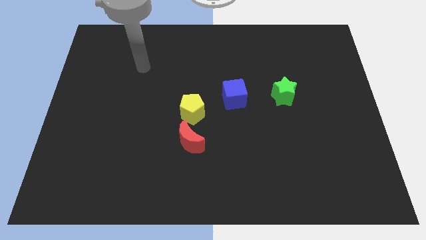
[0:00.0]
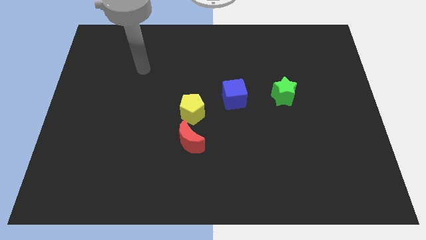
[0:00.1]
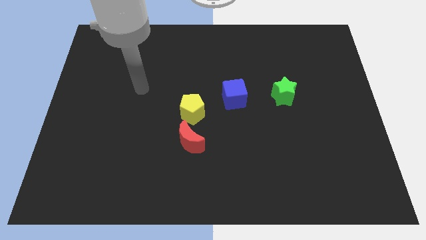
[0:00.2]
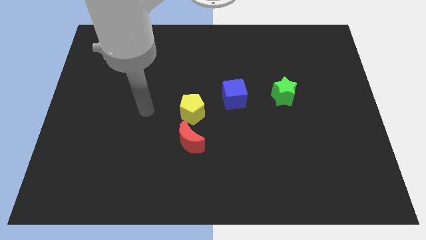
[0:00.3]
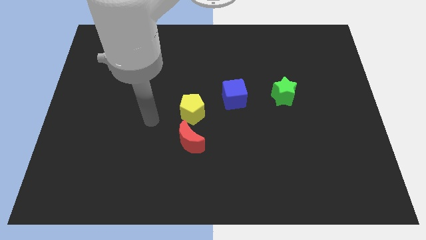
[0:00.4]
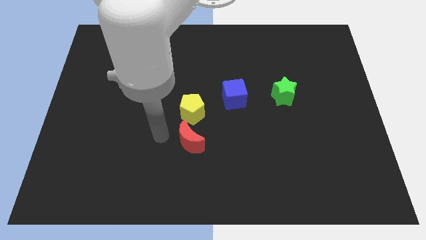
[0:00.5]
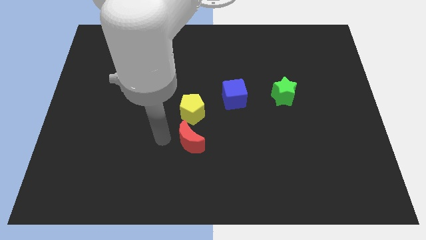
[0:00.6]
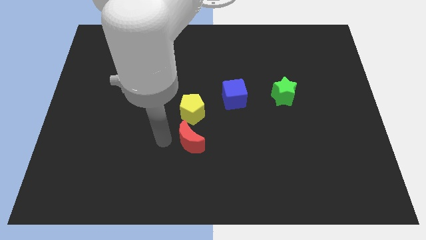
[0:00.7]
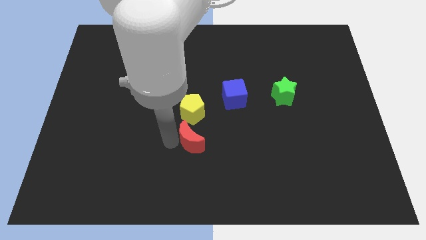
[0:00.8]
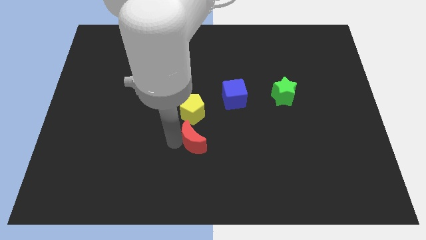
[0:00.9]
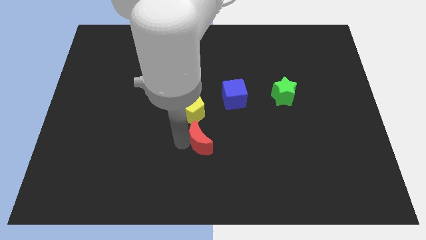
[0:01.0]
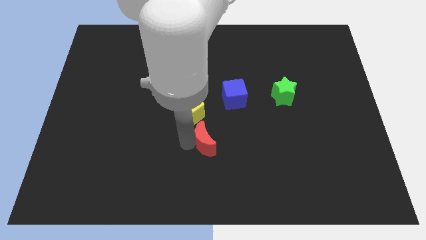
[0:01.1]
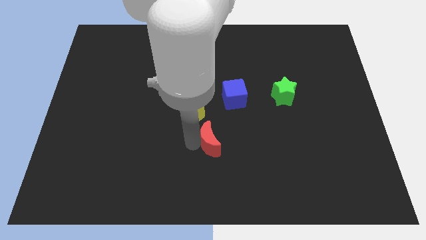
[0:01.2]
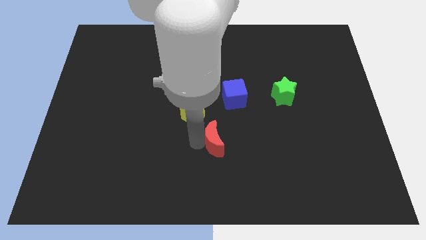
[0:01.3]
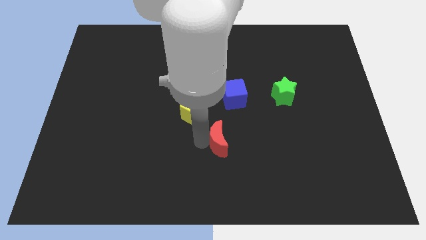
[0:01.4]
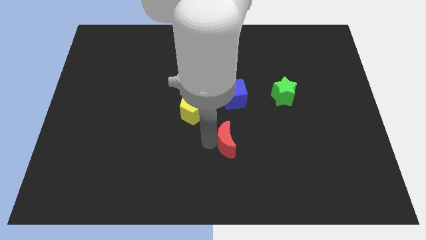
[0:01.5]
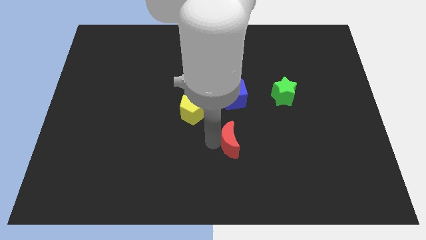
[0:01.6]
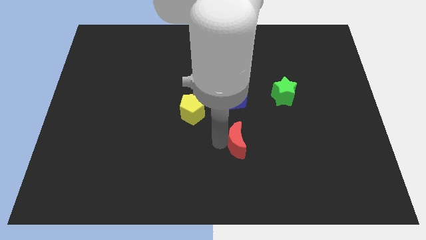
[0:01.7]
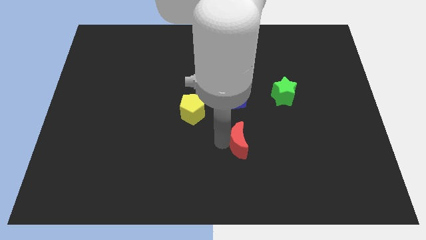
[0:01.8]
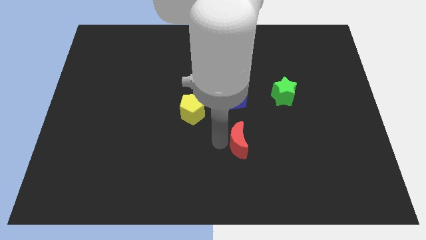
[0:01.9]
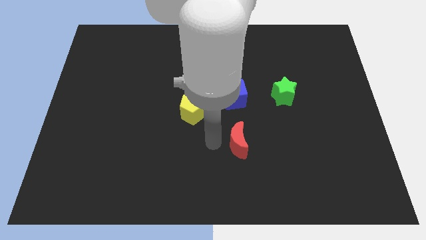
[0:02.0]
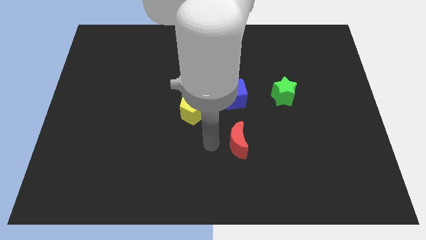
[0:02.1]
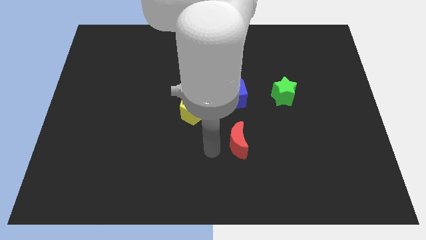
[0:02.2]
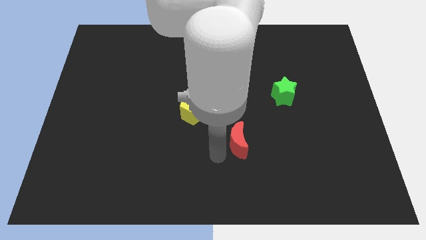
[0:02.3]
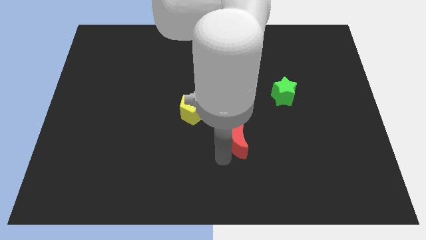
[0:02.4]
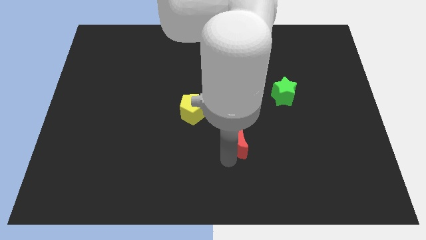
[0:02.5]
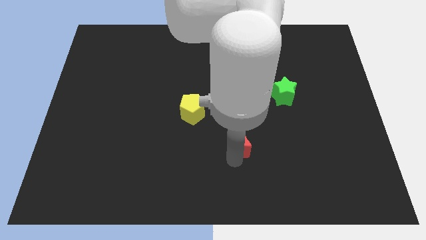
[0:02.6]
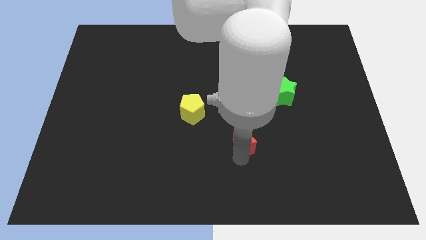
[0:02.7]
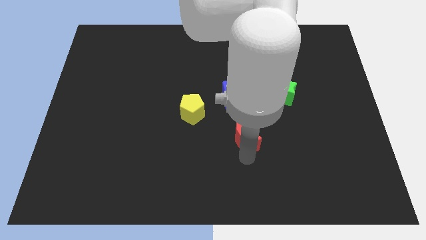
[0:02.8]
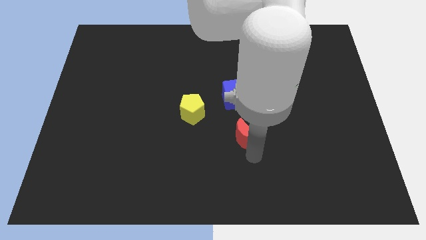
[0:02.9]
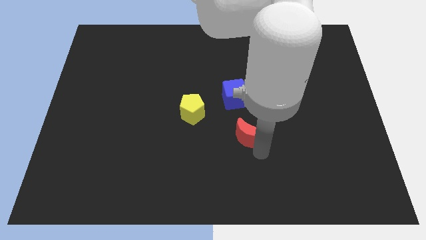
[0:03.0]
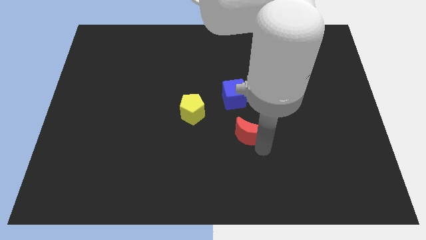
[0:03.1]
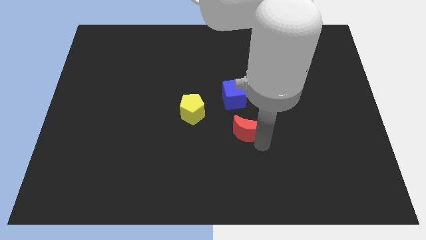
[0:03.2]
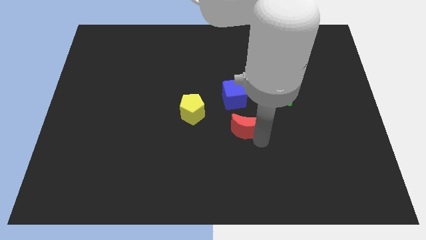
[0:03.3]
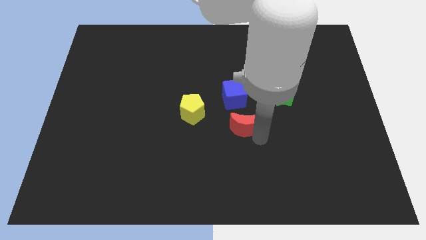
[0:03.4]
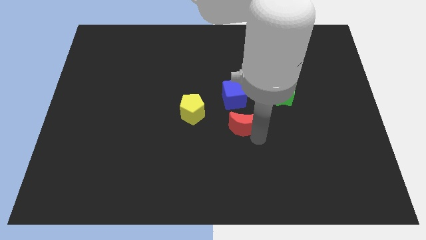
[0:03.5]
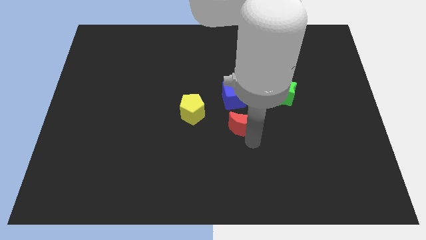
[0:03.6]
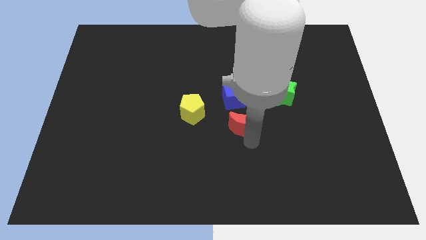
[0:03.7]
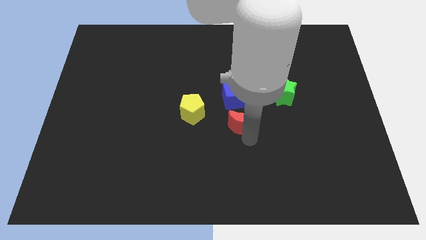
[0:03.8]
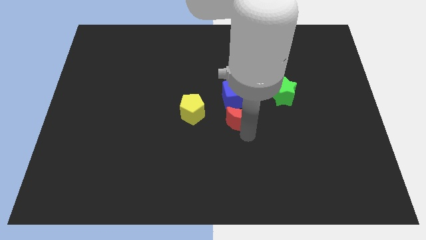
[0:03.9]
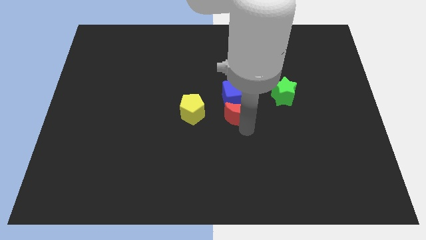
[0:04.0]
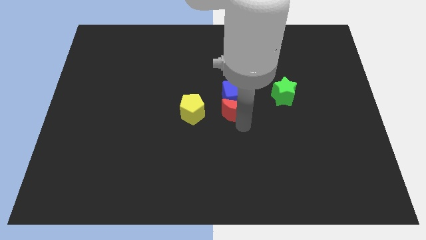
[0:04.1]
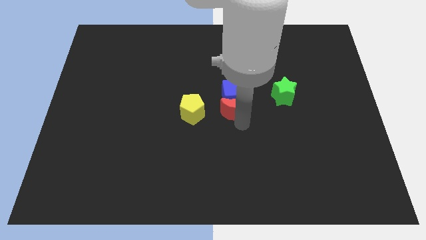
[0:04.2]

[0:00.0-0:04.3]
move the red block to the blue block

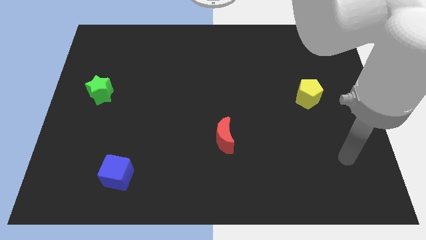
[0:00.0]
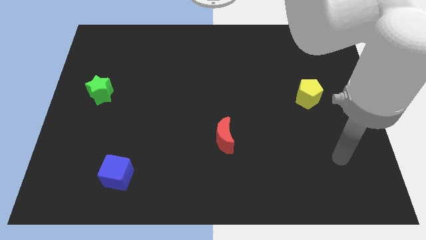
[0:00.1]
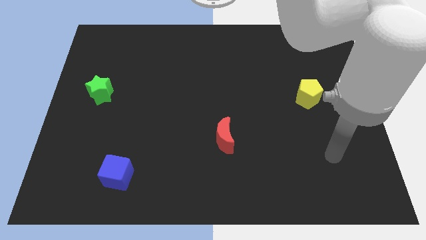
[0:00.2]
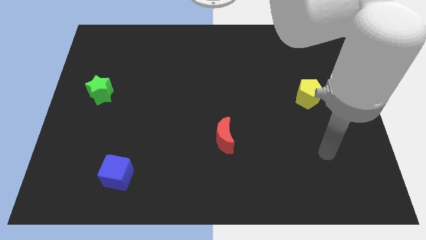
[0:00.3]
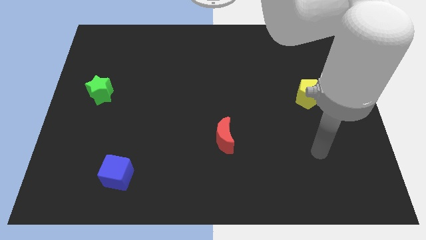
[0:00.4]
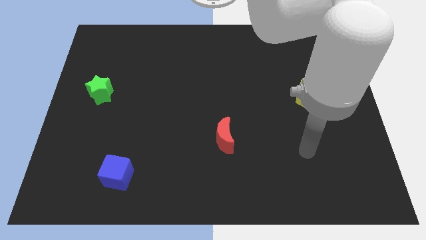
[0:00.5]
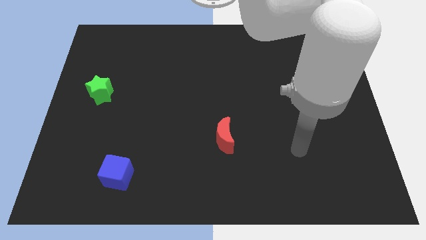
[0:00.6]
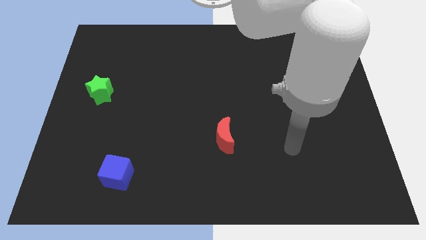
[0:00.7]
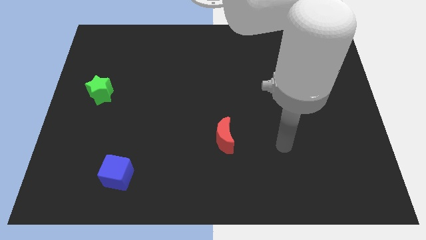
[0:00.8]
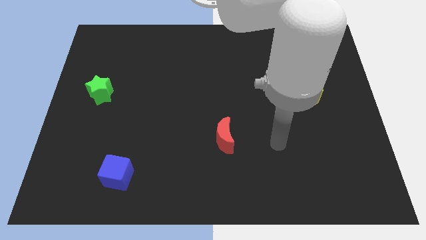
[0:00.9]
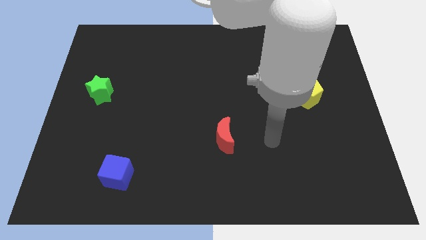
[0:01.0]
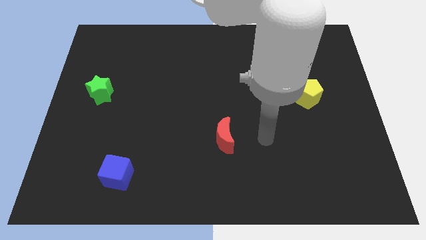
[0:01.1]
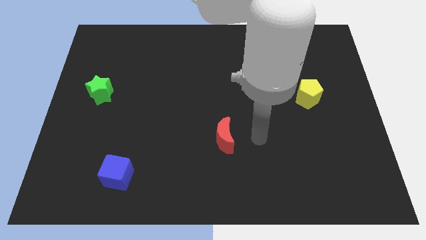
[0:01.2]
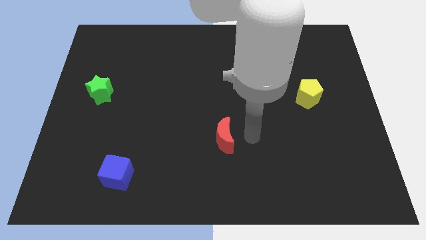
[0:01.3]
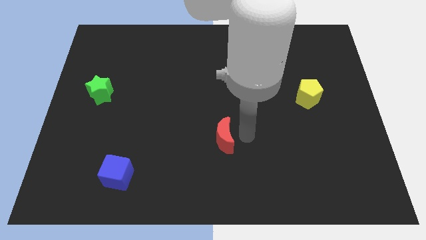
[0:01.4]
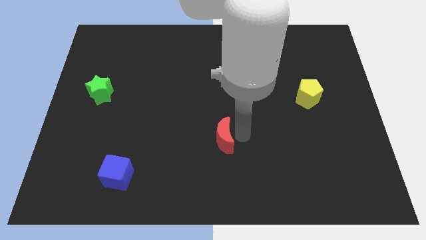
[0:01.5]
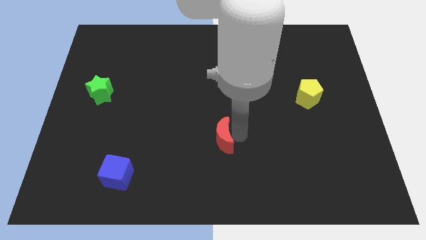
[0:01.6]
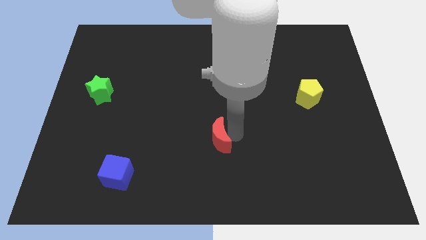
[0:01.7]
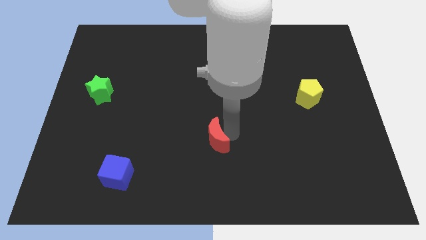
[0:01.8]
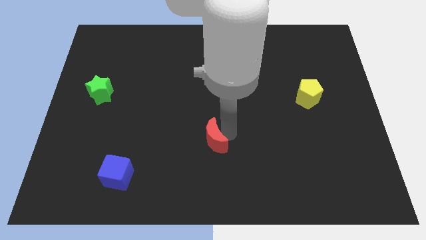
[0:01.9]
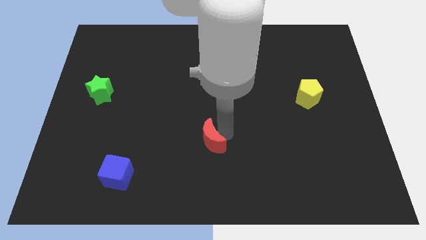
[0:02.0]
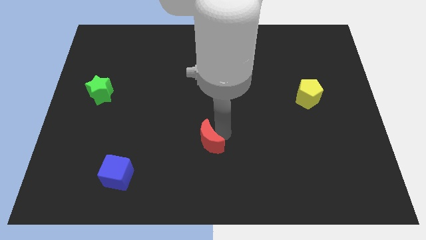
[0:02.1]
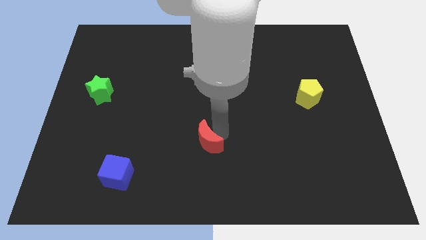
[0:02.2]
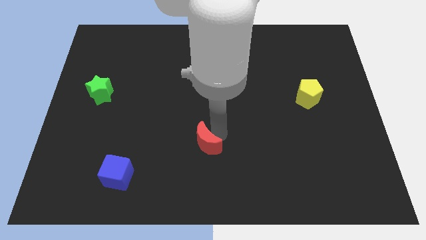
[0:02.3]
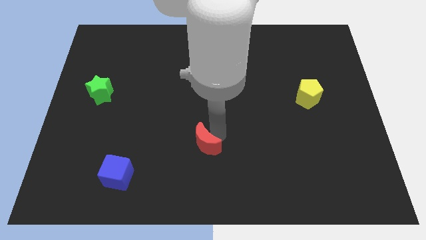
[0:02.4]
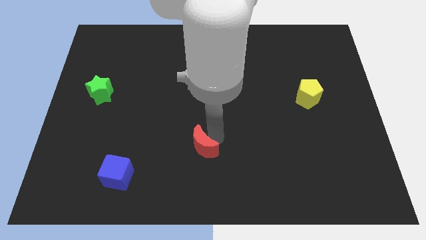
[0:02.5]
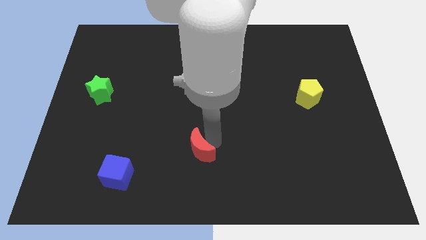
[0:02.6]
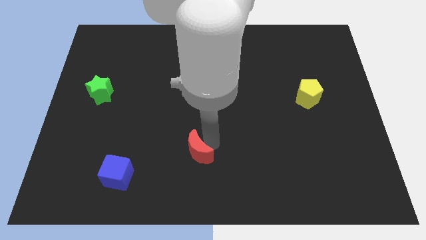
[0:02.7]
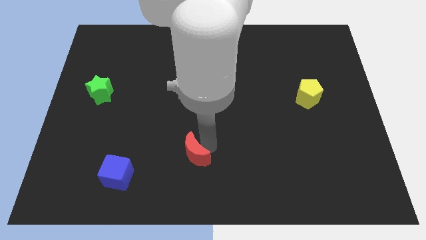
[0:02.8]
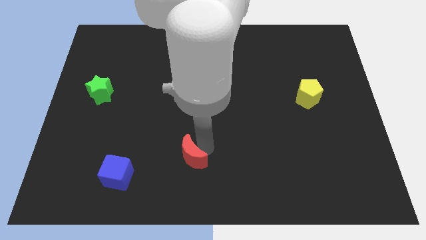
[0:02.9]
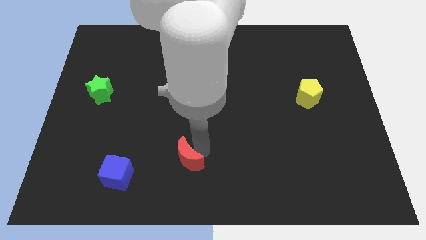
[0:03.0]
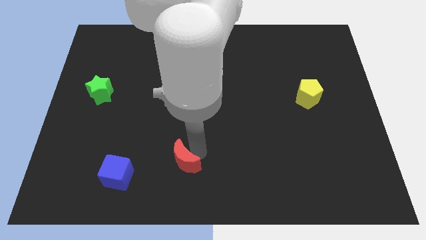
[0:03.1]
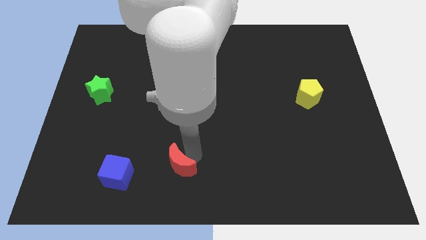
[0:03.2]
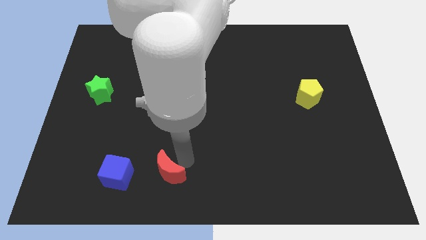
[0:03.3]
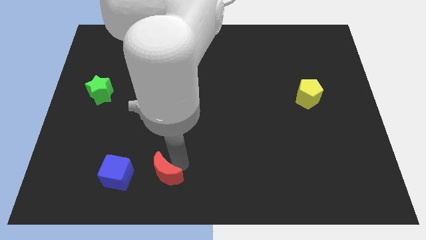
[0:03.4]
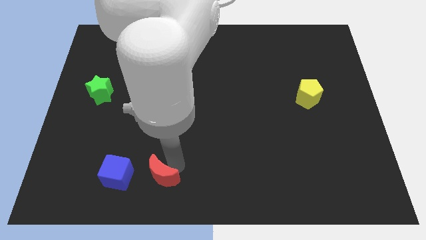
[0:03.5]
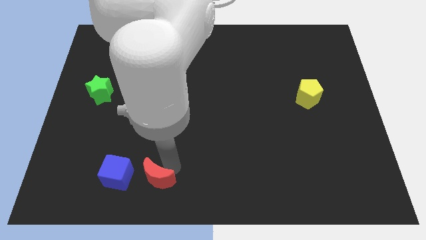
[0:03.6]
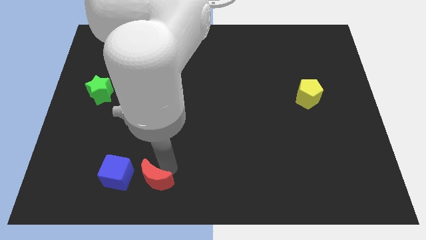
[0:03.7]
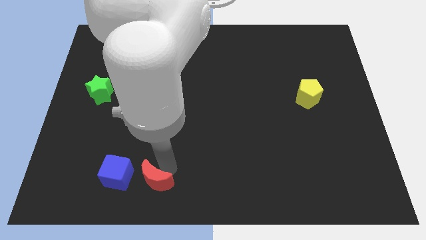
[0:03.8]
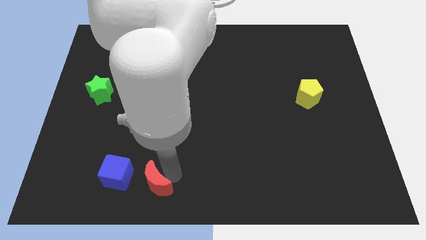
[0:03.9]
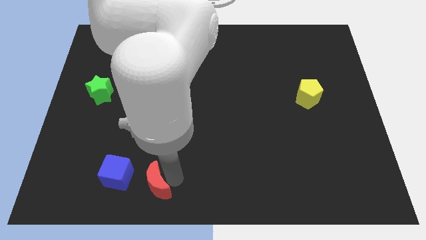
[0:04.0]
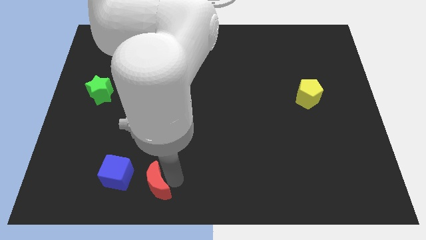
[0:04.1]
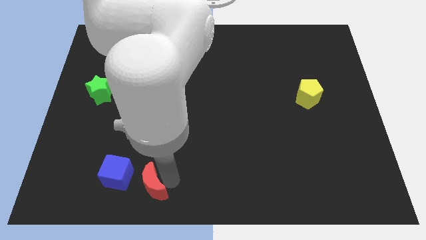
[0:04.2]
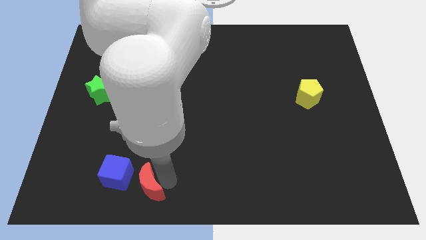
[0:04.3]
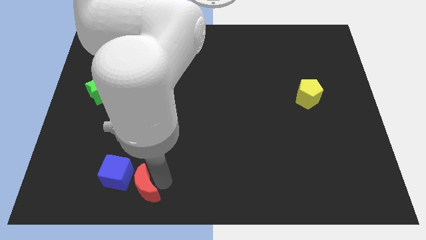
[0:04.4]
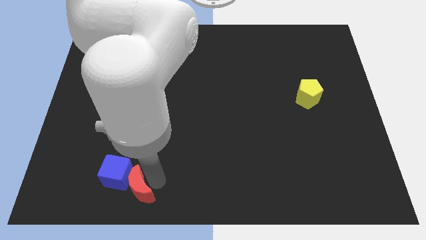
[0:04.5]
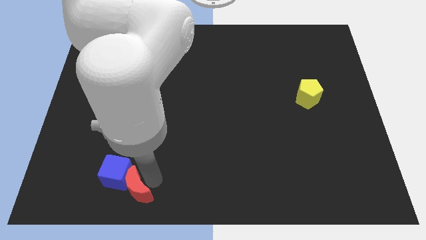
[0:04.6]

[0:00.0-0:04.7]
put the moon close to the cube
